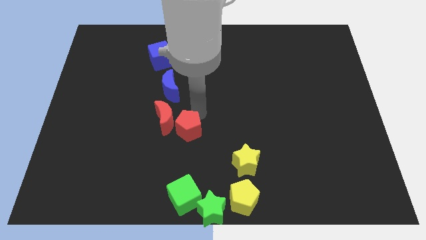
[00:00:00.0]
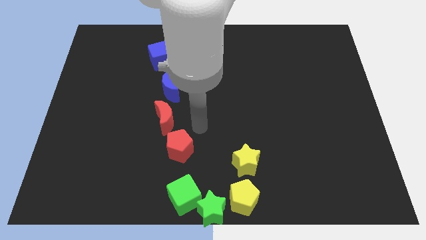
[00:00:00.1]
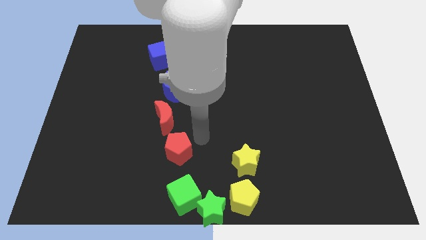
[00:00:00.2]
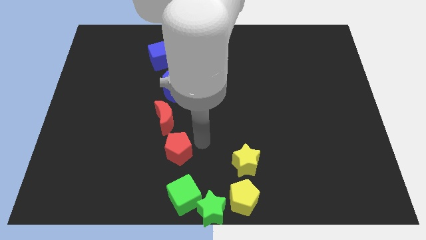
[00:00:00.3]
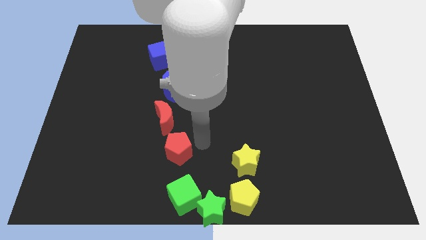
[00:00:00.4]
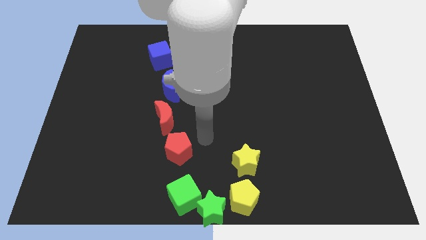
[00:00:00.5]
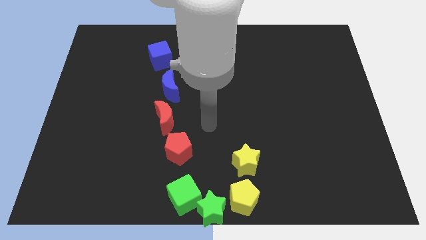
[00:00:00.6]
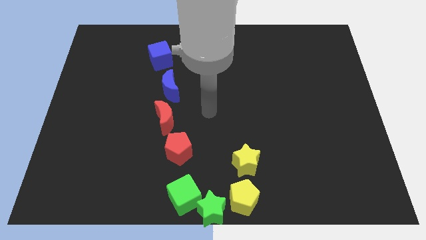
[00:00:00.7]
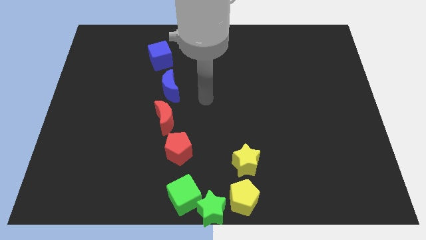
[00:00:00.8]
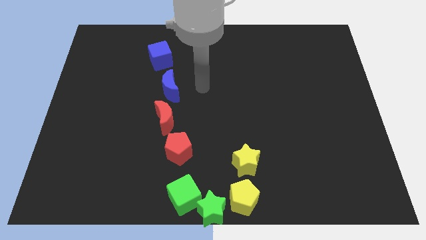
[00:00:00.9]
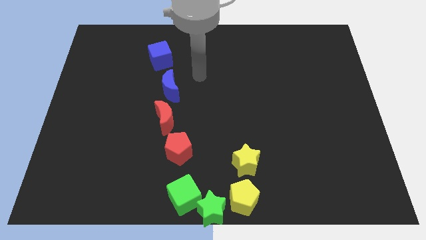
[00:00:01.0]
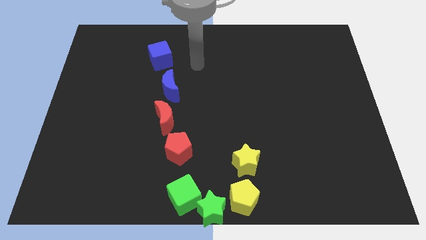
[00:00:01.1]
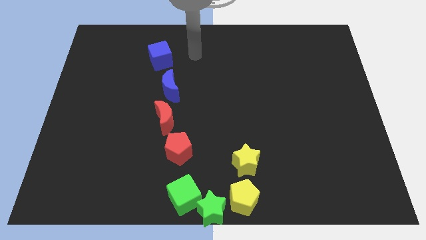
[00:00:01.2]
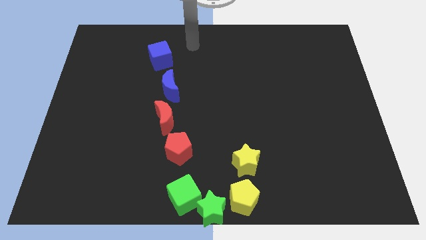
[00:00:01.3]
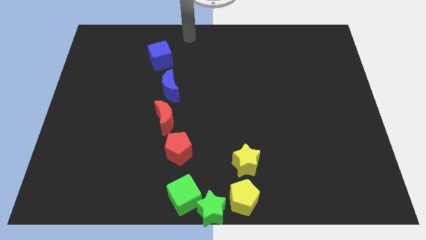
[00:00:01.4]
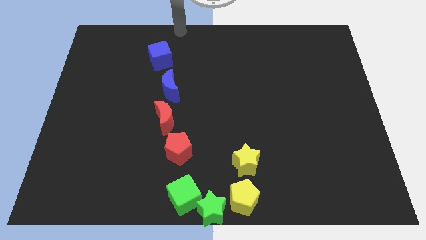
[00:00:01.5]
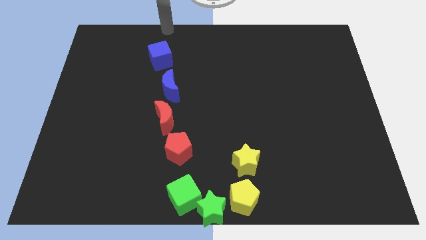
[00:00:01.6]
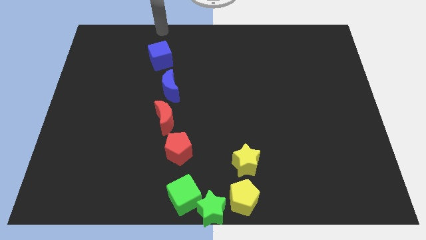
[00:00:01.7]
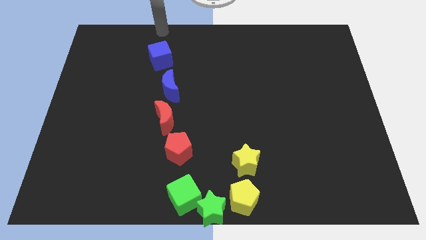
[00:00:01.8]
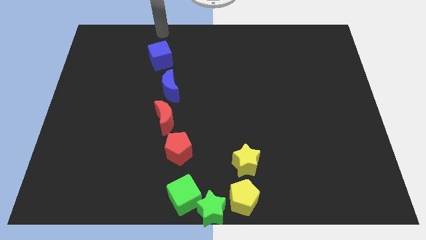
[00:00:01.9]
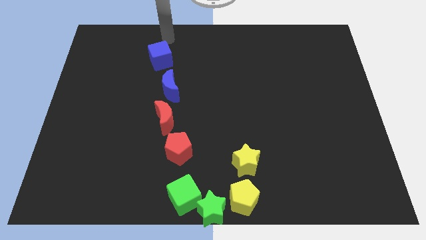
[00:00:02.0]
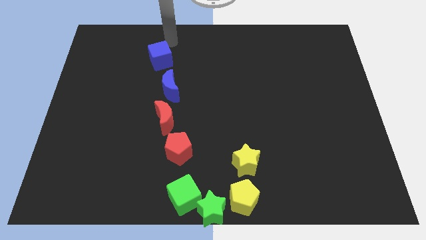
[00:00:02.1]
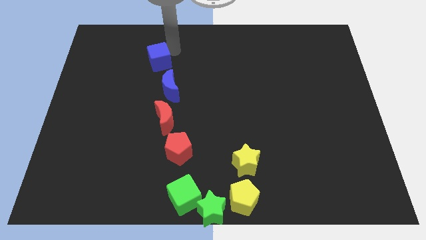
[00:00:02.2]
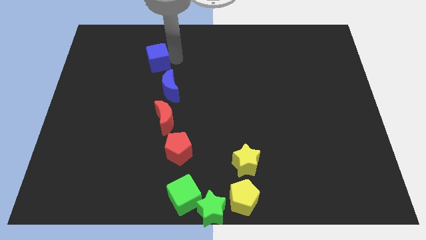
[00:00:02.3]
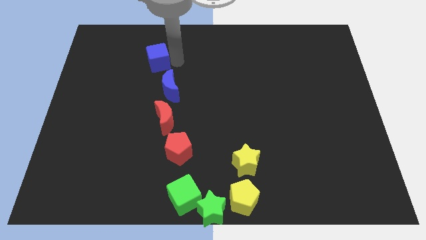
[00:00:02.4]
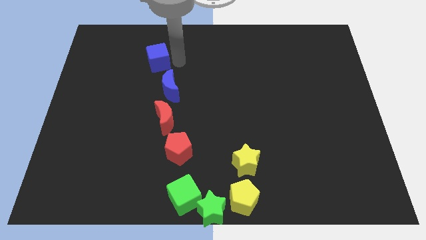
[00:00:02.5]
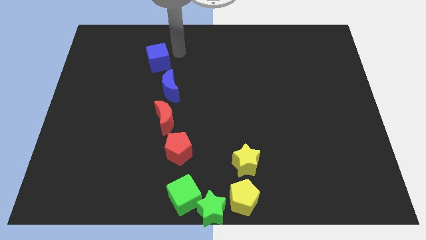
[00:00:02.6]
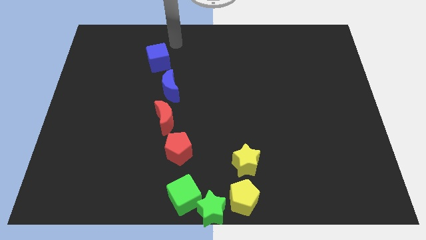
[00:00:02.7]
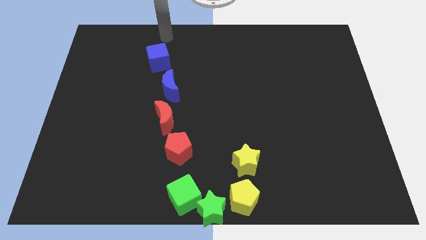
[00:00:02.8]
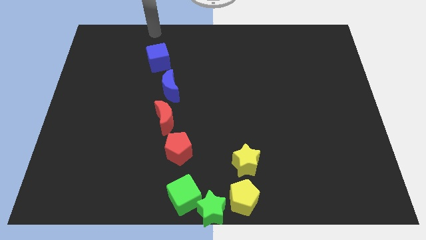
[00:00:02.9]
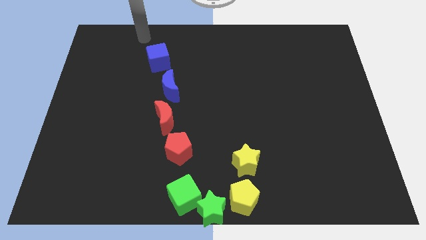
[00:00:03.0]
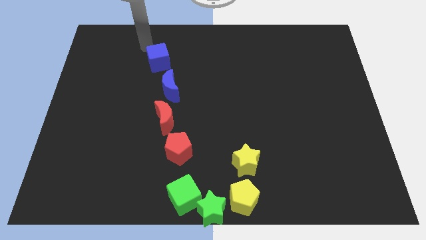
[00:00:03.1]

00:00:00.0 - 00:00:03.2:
slightly touch down the blue cube

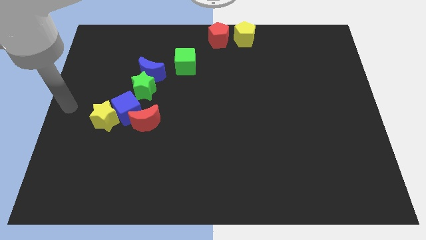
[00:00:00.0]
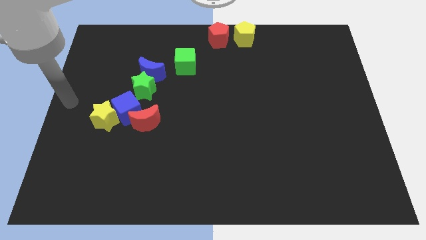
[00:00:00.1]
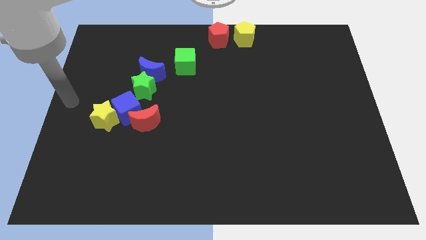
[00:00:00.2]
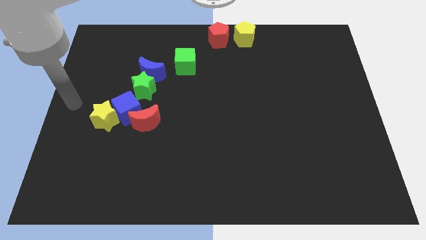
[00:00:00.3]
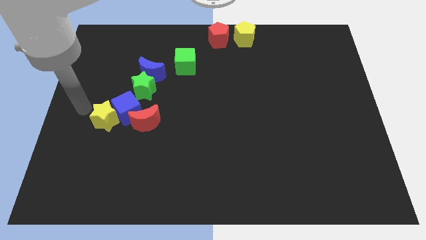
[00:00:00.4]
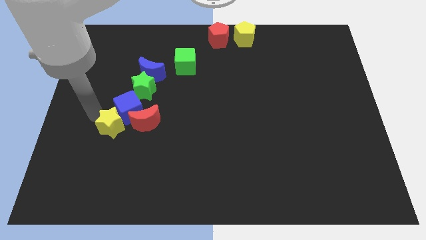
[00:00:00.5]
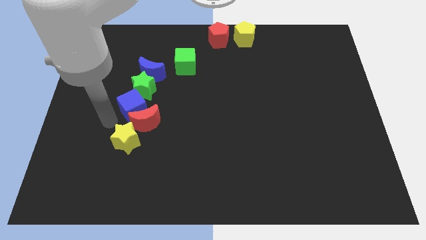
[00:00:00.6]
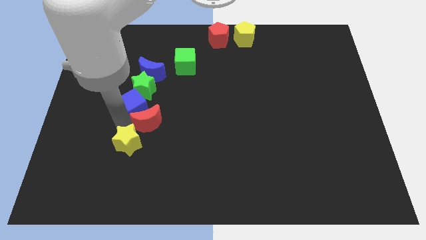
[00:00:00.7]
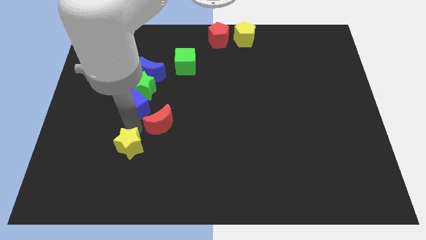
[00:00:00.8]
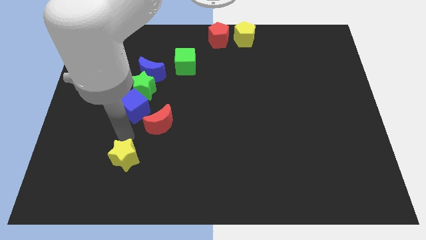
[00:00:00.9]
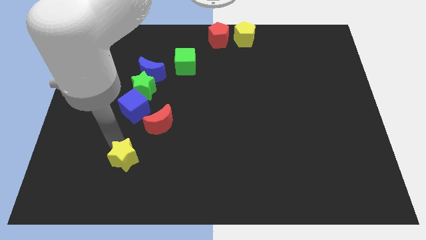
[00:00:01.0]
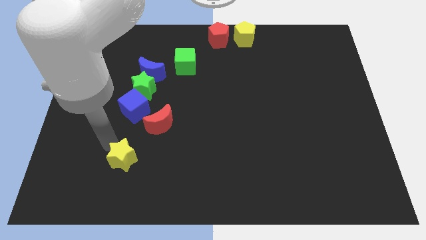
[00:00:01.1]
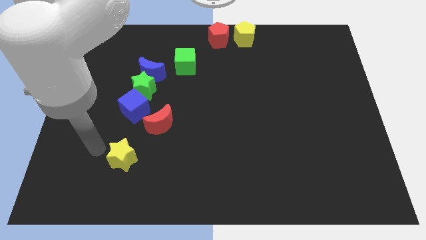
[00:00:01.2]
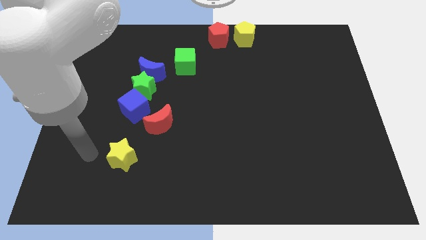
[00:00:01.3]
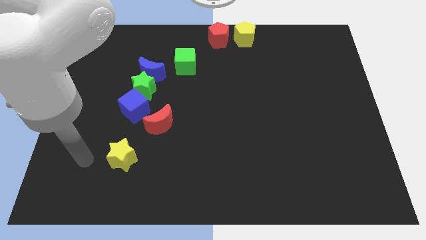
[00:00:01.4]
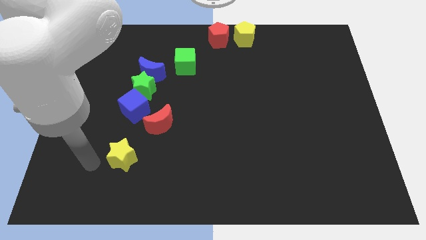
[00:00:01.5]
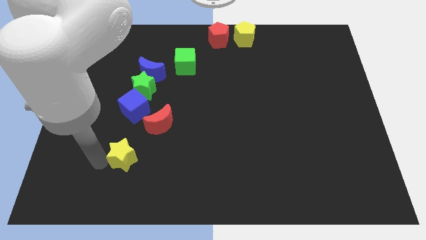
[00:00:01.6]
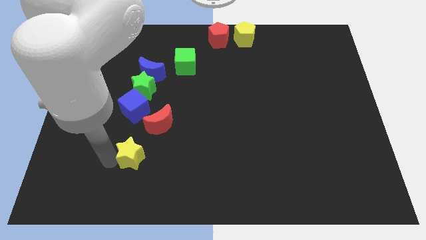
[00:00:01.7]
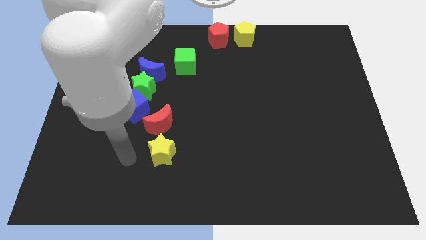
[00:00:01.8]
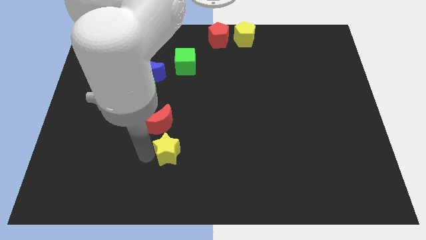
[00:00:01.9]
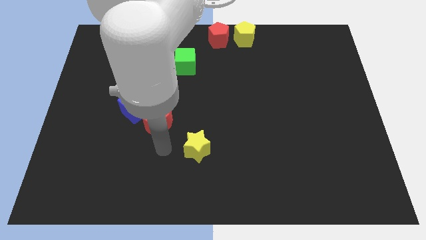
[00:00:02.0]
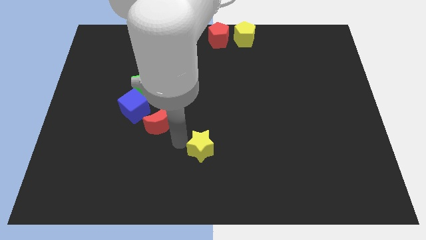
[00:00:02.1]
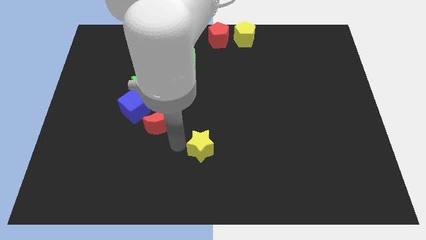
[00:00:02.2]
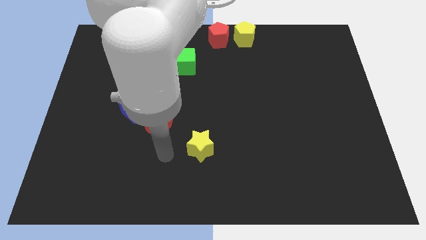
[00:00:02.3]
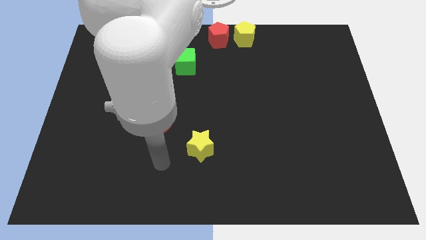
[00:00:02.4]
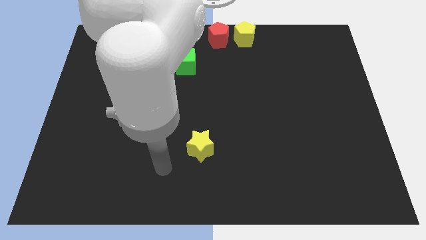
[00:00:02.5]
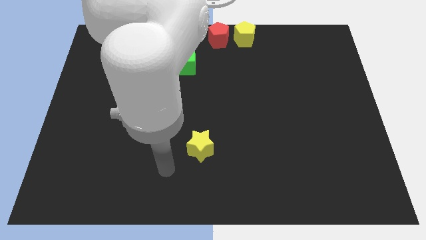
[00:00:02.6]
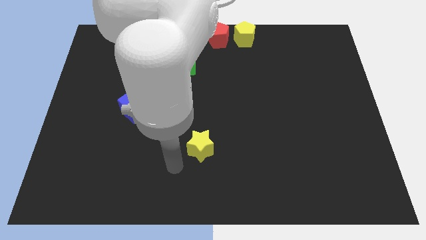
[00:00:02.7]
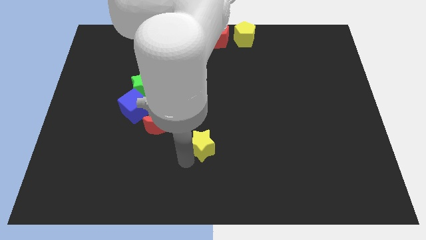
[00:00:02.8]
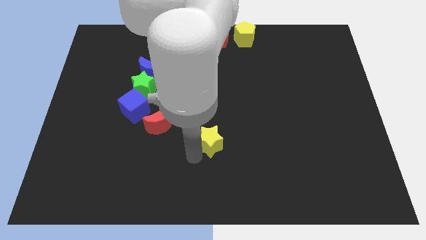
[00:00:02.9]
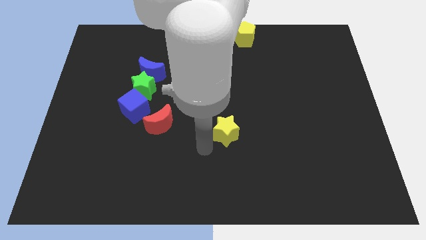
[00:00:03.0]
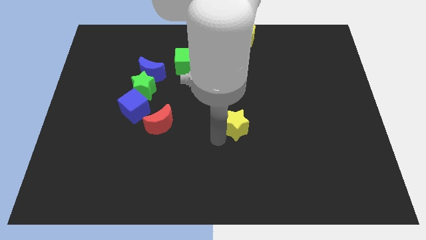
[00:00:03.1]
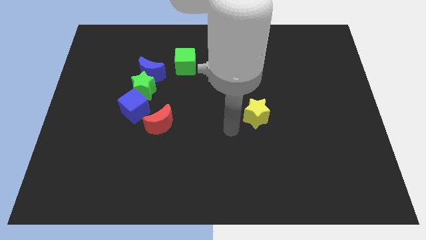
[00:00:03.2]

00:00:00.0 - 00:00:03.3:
push the yellow star horizontally to the right side of the red crescent

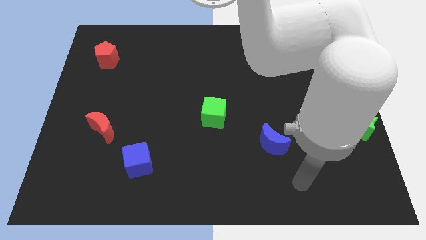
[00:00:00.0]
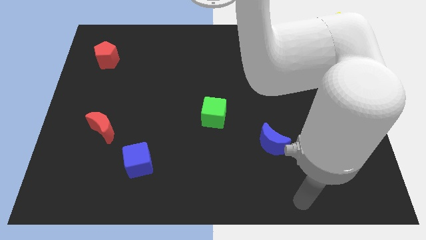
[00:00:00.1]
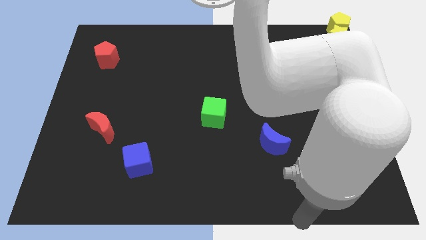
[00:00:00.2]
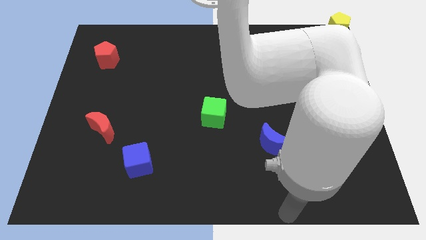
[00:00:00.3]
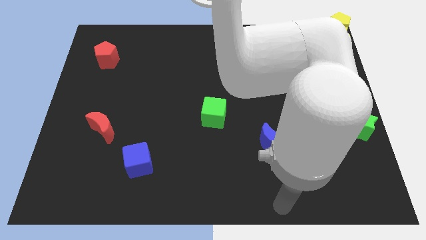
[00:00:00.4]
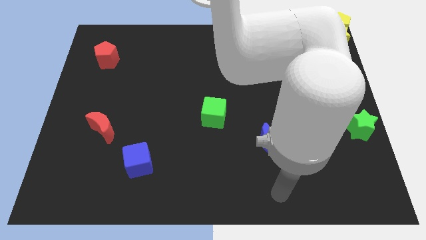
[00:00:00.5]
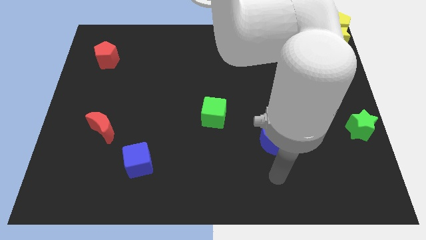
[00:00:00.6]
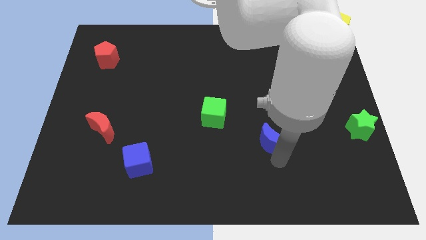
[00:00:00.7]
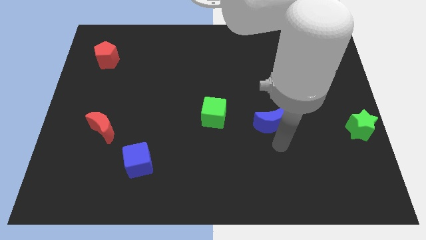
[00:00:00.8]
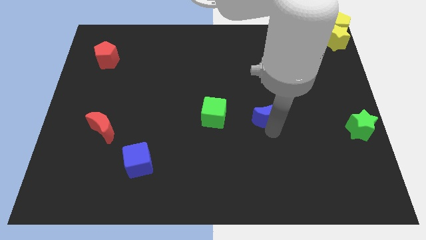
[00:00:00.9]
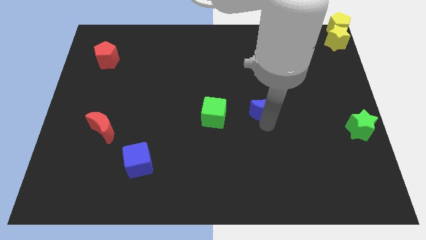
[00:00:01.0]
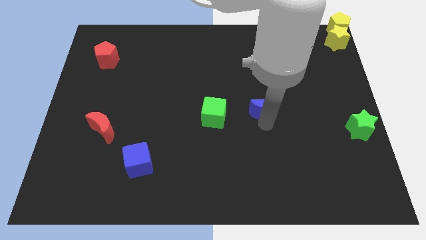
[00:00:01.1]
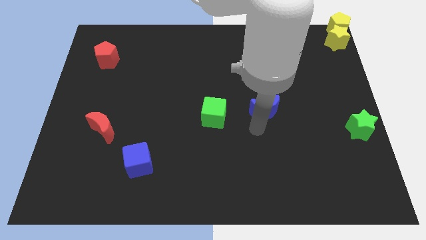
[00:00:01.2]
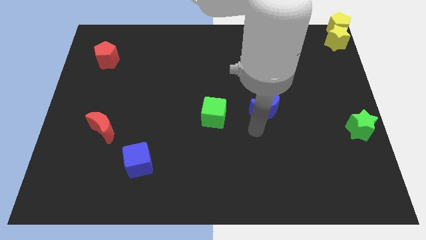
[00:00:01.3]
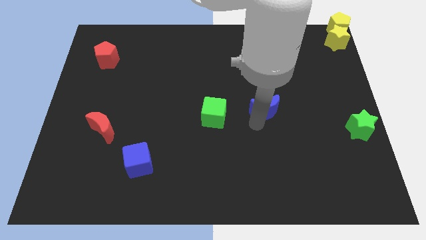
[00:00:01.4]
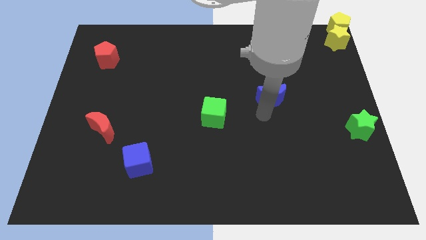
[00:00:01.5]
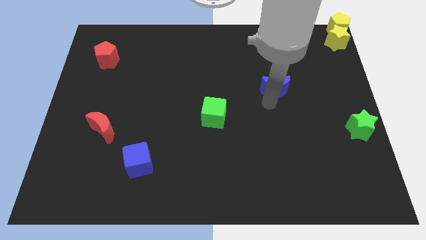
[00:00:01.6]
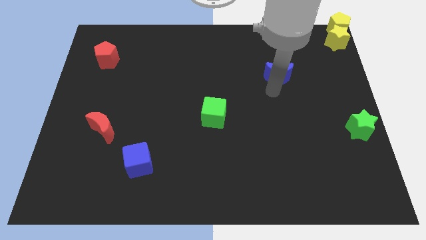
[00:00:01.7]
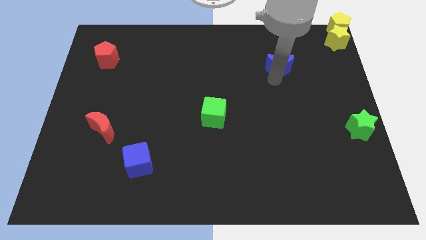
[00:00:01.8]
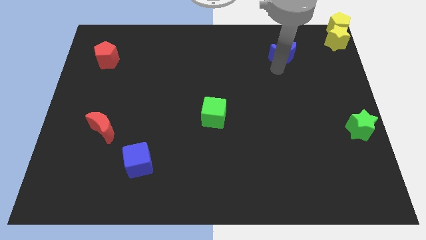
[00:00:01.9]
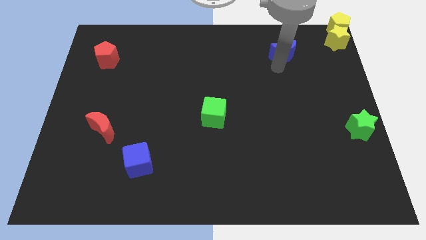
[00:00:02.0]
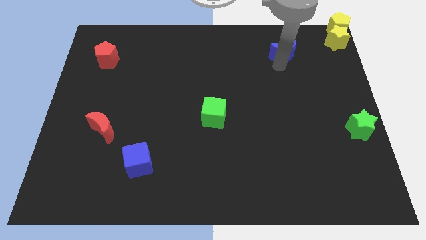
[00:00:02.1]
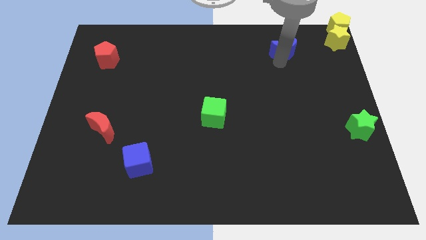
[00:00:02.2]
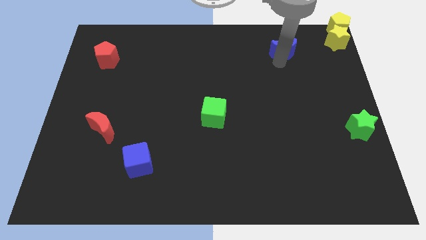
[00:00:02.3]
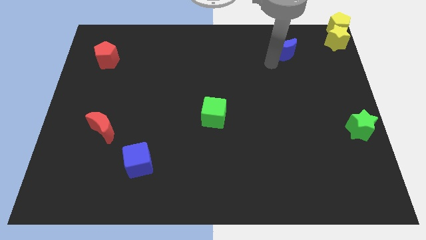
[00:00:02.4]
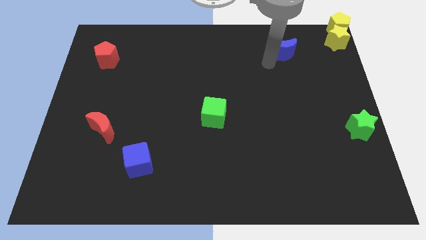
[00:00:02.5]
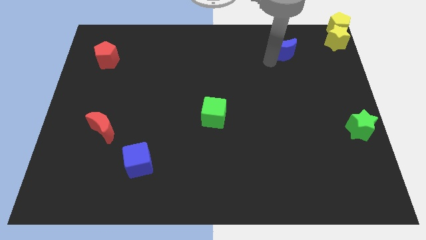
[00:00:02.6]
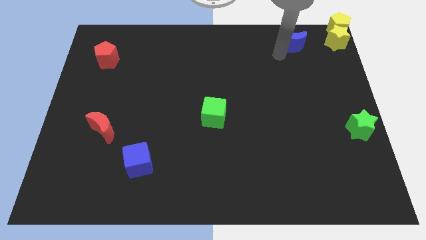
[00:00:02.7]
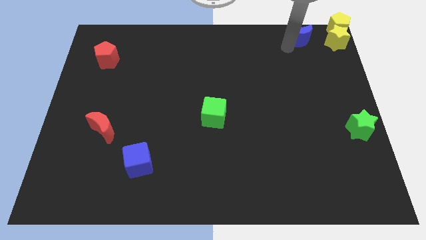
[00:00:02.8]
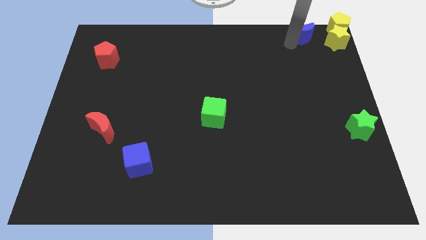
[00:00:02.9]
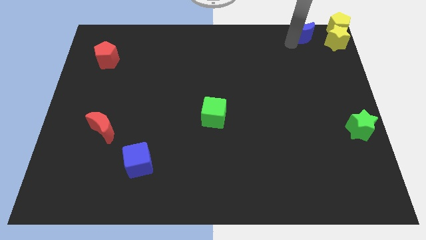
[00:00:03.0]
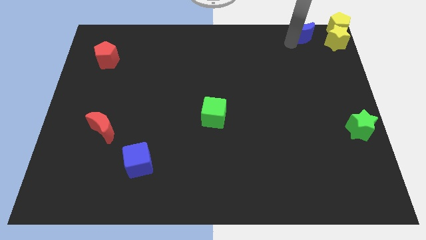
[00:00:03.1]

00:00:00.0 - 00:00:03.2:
place the blue moon left to the yellow star
